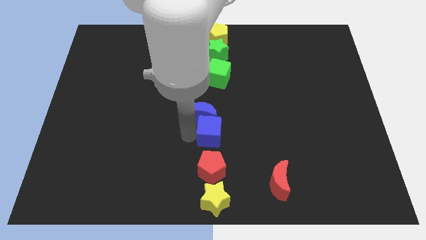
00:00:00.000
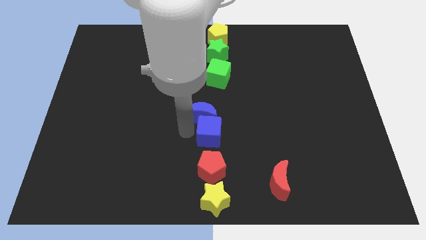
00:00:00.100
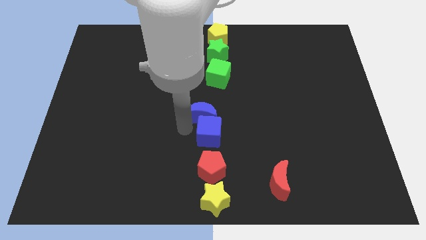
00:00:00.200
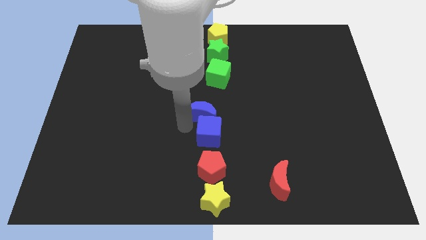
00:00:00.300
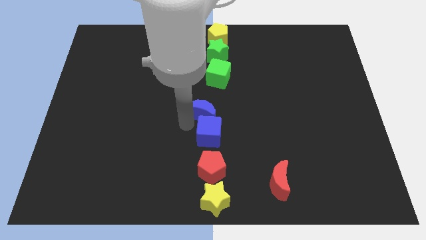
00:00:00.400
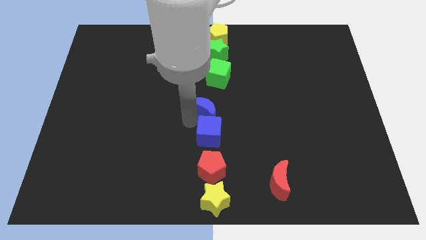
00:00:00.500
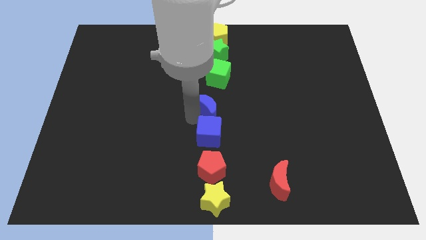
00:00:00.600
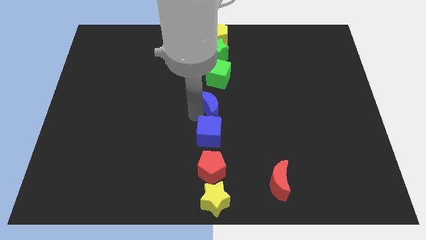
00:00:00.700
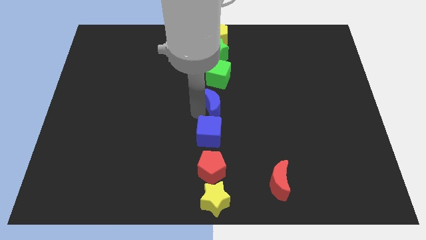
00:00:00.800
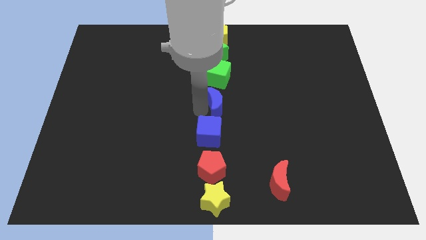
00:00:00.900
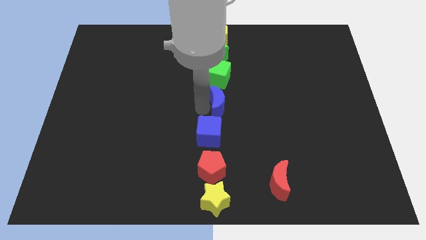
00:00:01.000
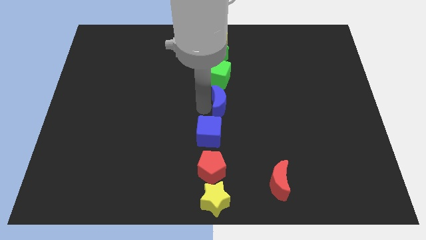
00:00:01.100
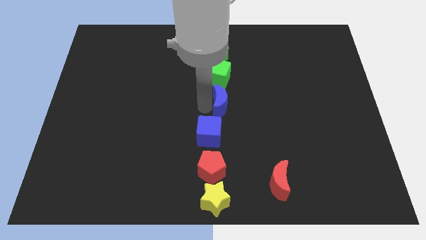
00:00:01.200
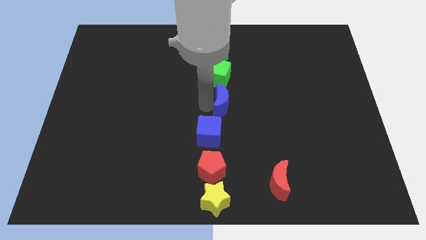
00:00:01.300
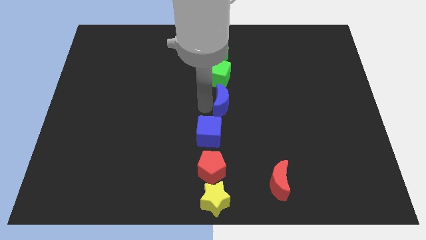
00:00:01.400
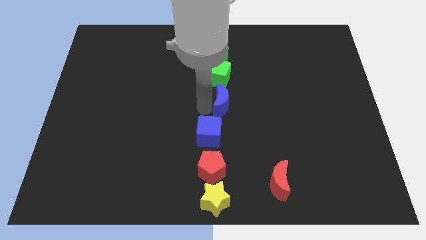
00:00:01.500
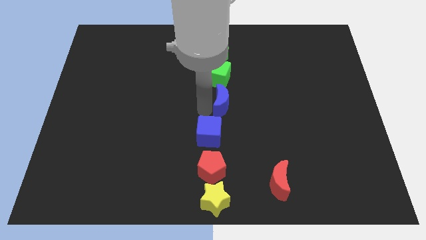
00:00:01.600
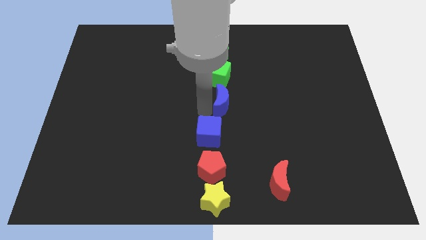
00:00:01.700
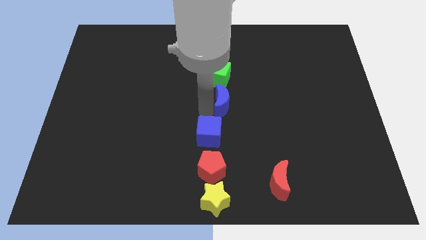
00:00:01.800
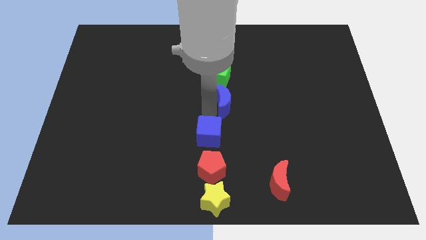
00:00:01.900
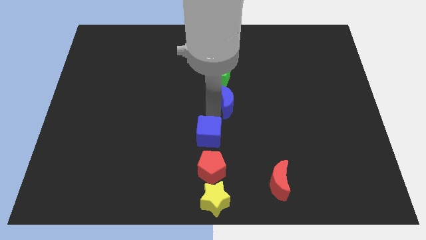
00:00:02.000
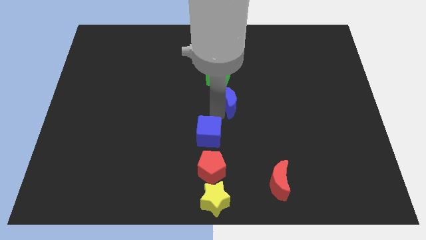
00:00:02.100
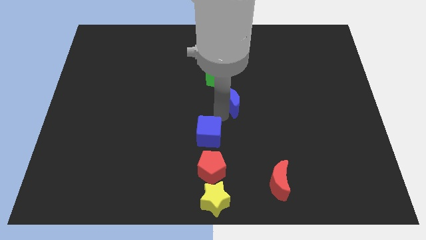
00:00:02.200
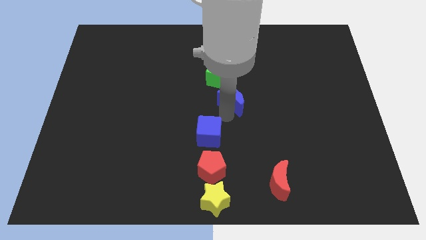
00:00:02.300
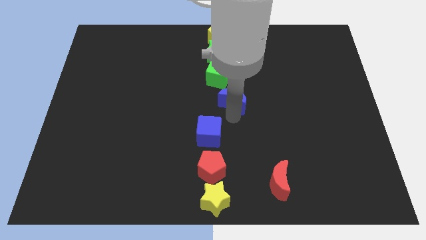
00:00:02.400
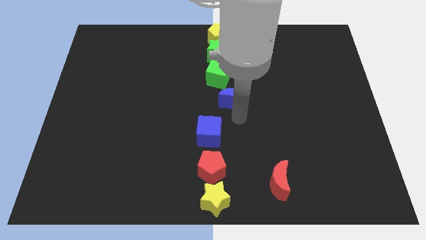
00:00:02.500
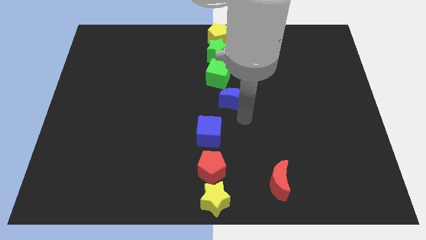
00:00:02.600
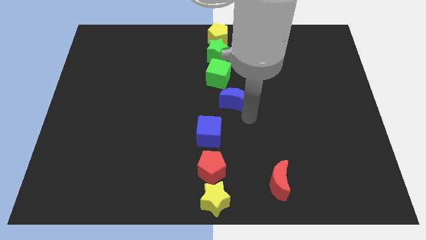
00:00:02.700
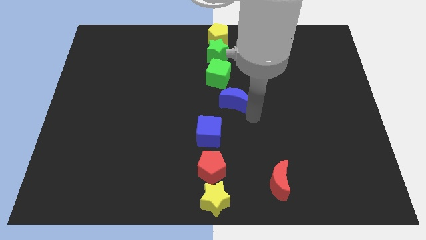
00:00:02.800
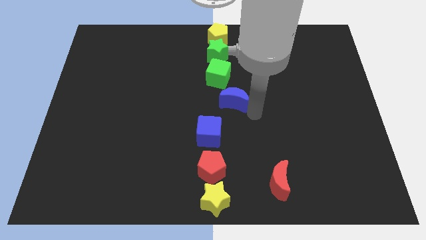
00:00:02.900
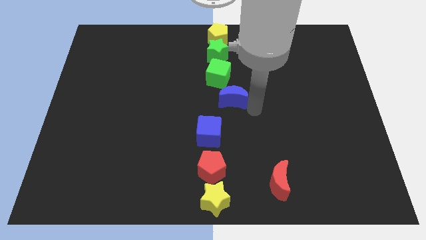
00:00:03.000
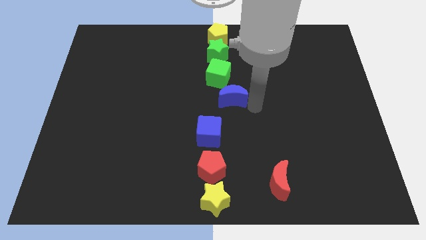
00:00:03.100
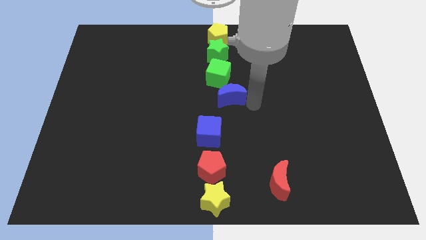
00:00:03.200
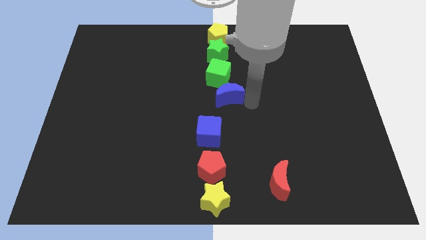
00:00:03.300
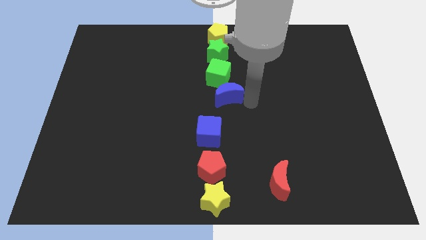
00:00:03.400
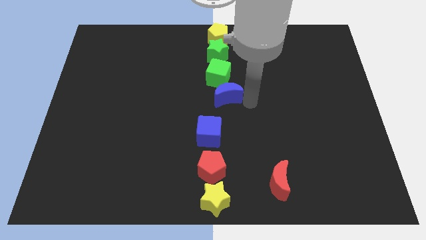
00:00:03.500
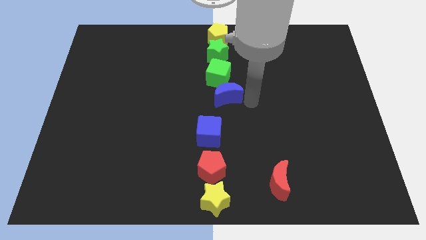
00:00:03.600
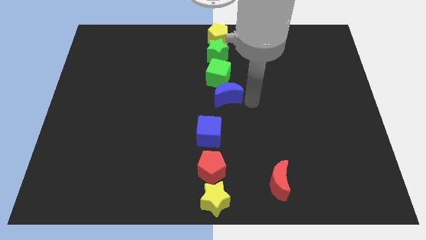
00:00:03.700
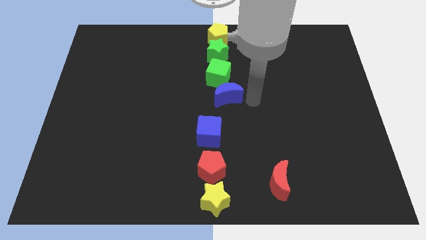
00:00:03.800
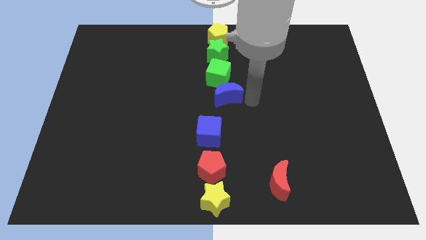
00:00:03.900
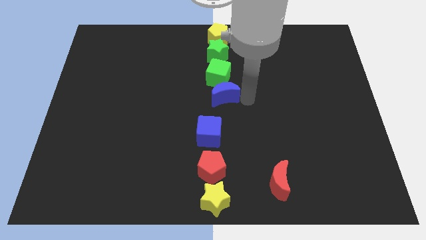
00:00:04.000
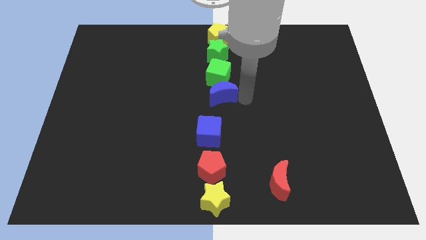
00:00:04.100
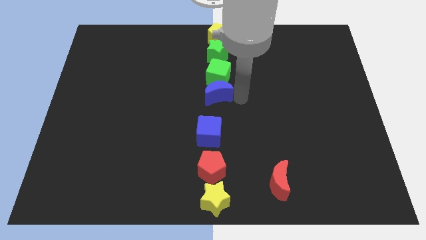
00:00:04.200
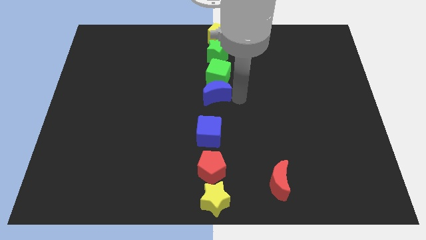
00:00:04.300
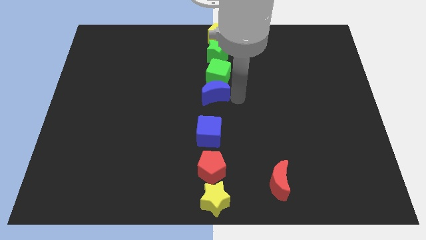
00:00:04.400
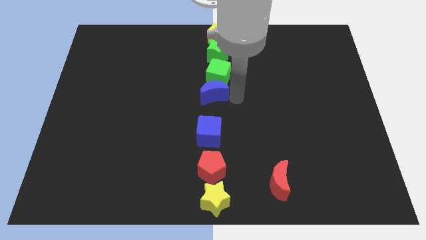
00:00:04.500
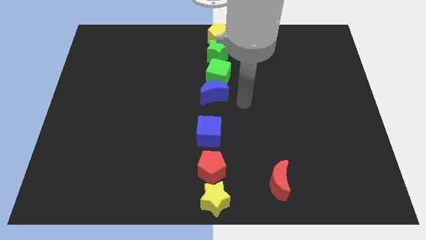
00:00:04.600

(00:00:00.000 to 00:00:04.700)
place the blue moon below green cube in a line

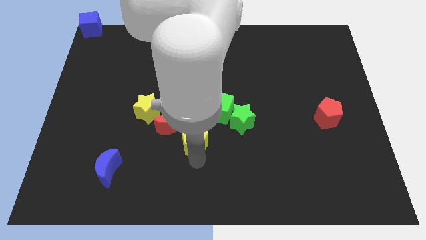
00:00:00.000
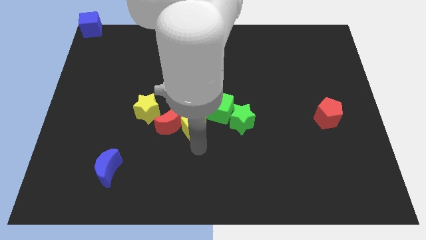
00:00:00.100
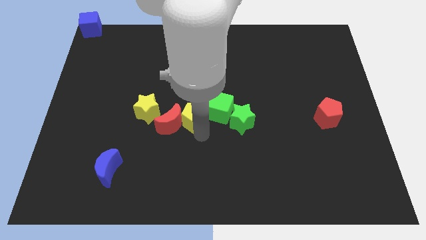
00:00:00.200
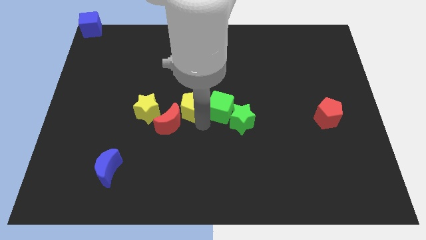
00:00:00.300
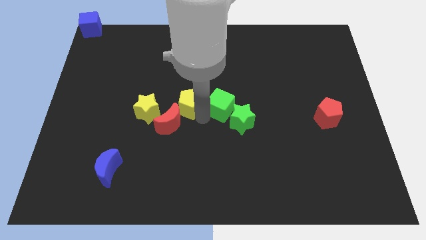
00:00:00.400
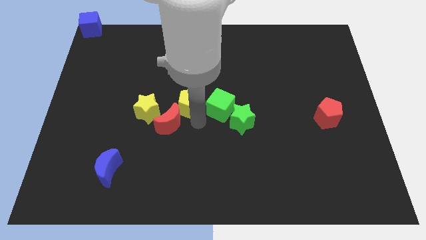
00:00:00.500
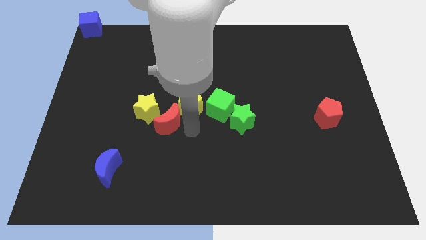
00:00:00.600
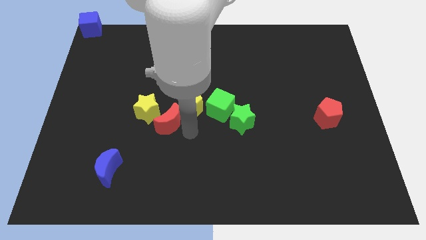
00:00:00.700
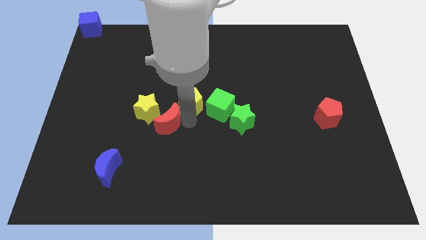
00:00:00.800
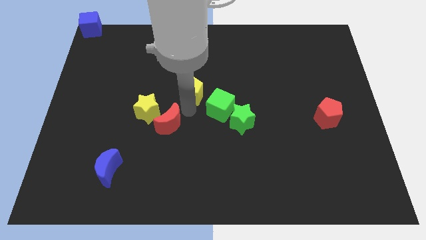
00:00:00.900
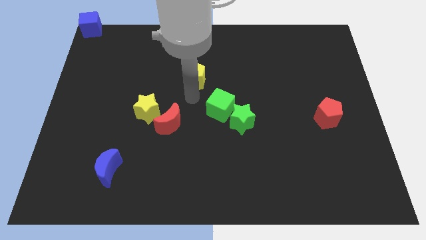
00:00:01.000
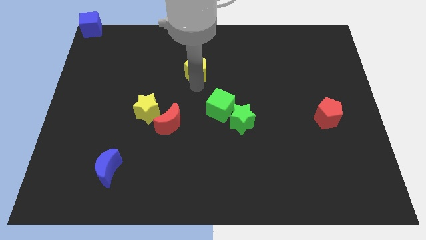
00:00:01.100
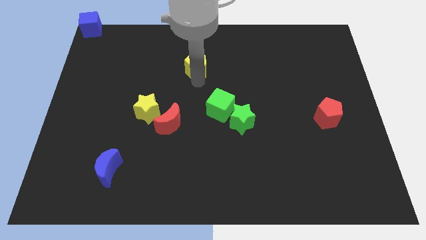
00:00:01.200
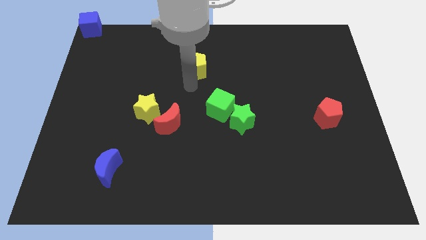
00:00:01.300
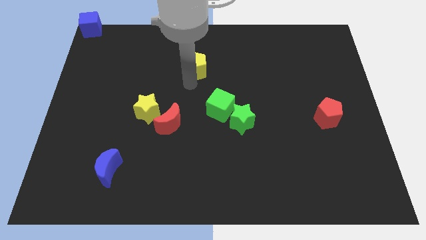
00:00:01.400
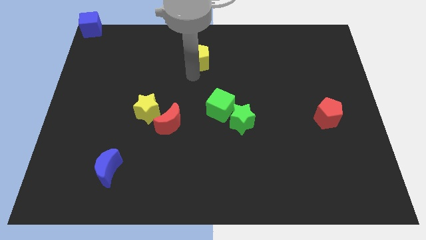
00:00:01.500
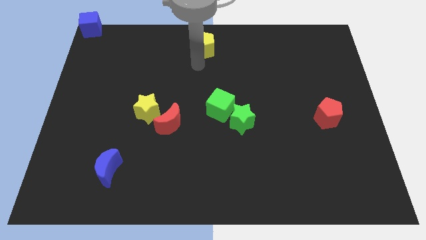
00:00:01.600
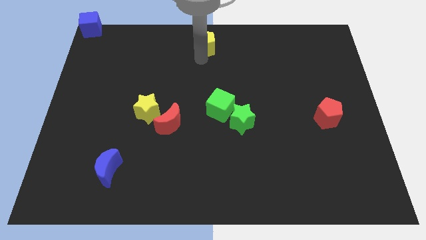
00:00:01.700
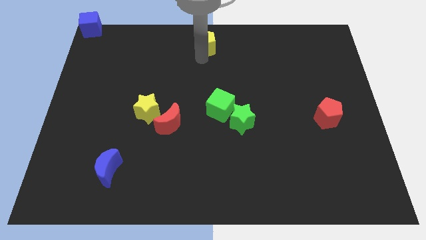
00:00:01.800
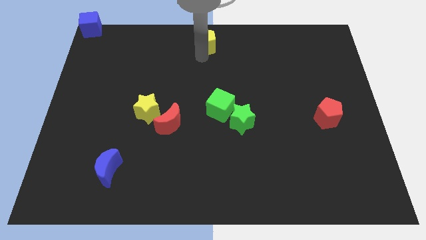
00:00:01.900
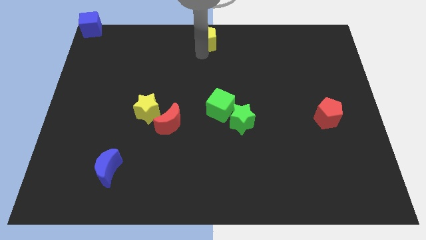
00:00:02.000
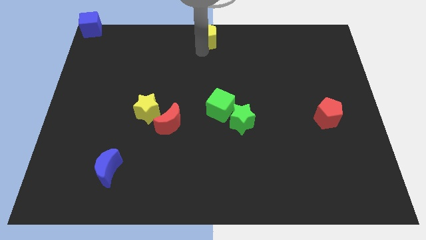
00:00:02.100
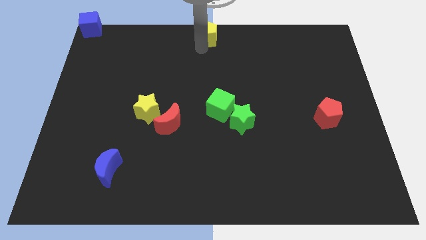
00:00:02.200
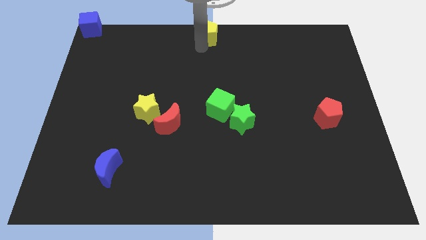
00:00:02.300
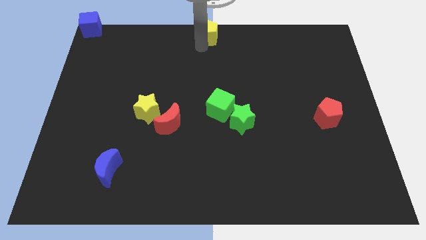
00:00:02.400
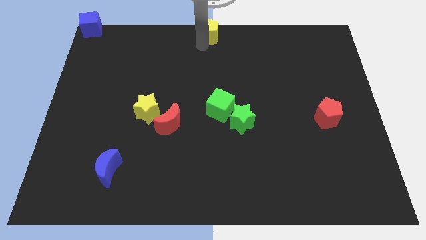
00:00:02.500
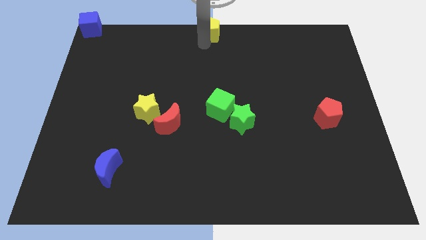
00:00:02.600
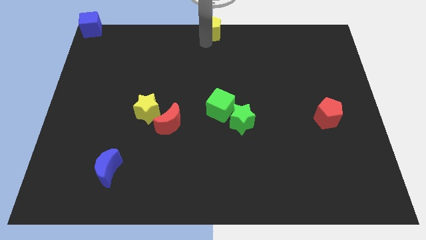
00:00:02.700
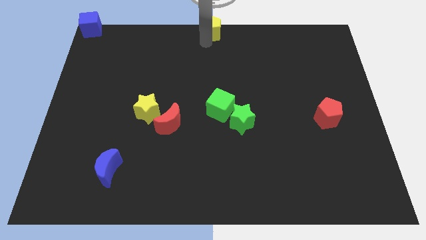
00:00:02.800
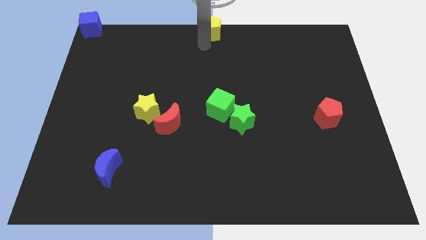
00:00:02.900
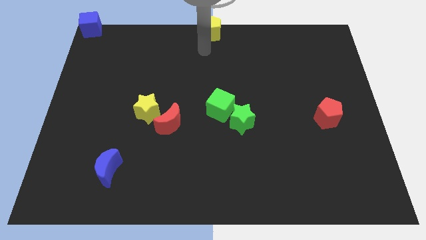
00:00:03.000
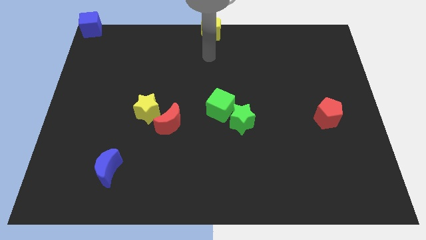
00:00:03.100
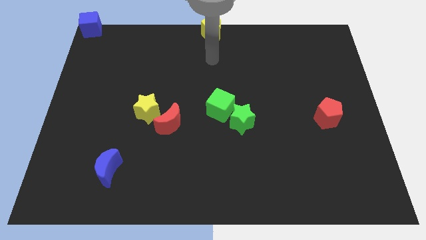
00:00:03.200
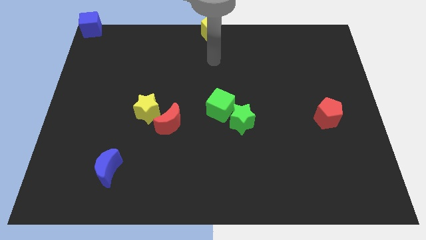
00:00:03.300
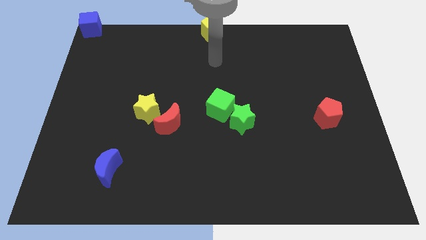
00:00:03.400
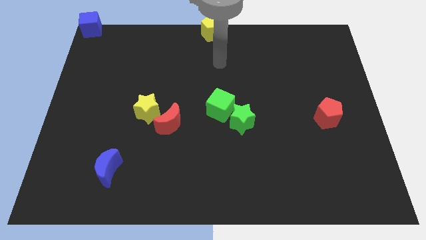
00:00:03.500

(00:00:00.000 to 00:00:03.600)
place the yellow pentagon at the top center of the board

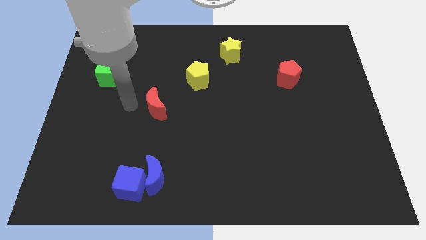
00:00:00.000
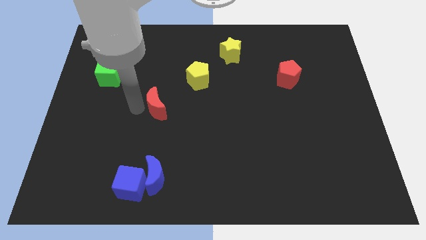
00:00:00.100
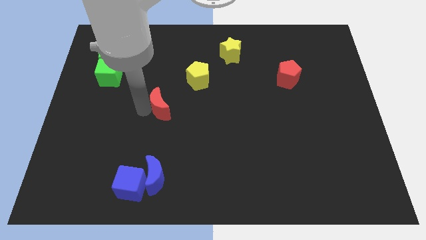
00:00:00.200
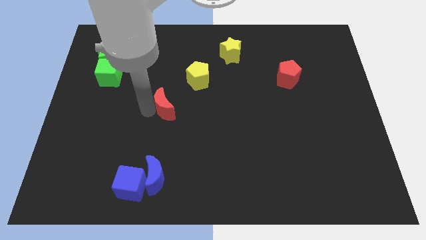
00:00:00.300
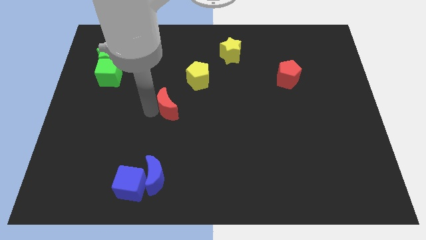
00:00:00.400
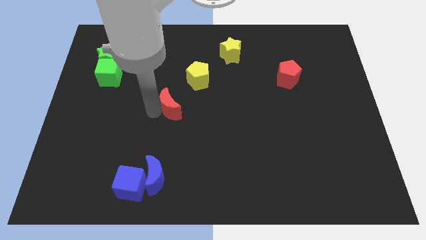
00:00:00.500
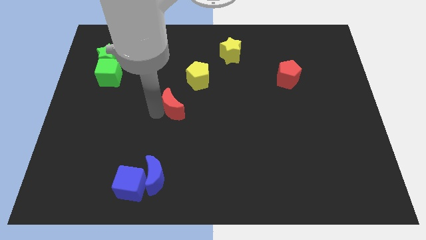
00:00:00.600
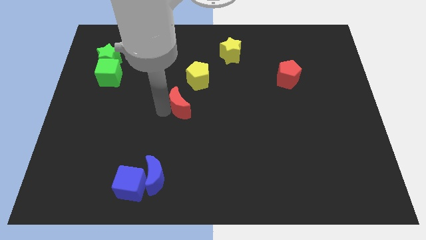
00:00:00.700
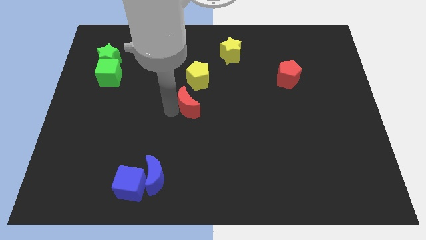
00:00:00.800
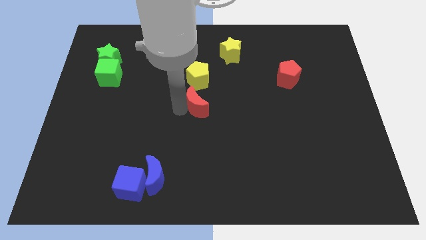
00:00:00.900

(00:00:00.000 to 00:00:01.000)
push the red crescent to the bottom of the yellow pentagon
